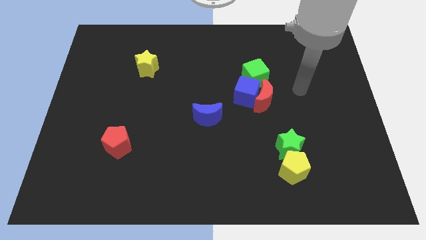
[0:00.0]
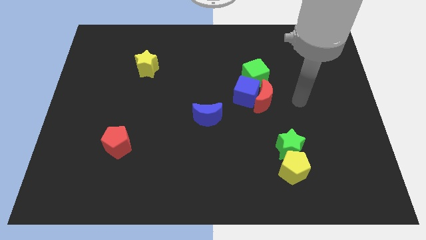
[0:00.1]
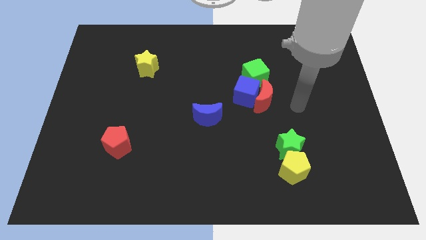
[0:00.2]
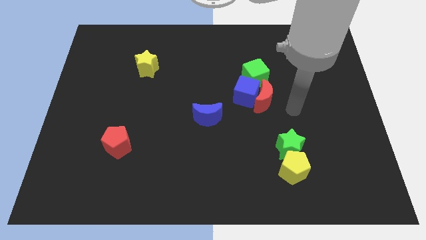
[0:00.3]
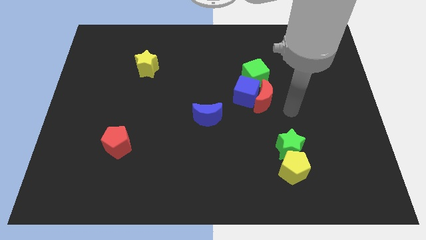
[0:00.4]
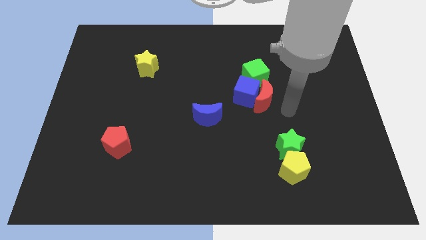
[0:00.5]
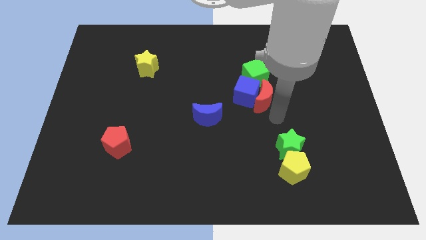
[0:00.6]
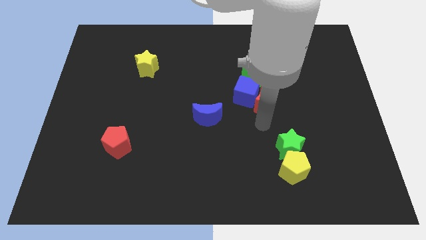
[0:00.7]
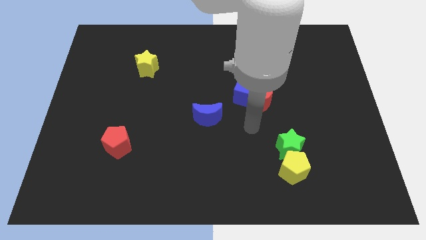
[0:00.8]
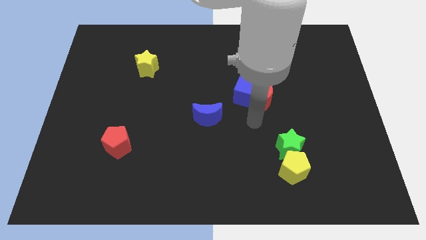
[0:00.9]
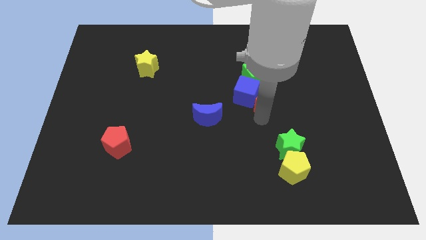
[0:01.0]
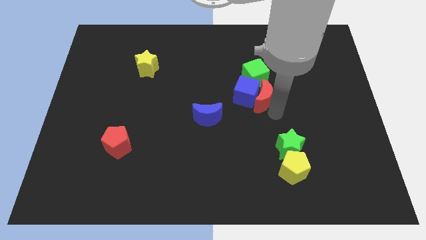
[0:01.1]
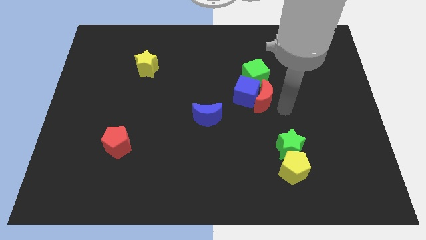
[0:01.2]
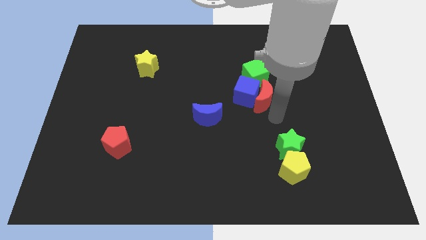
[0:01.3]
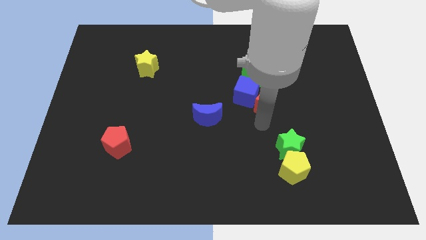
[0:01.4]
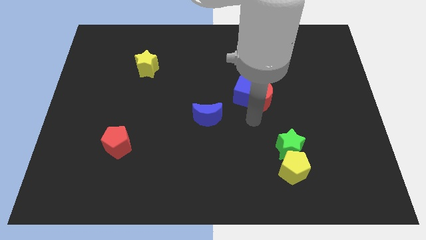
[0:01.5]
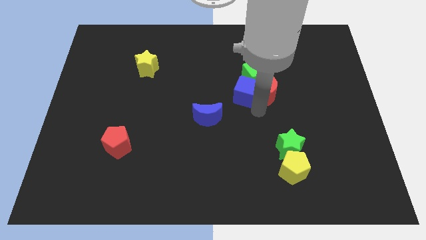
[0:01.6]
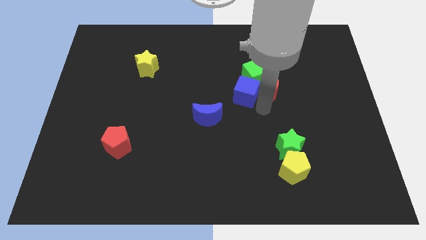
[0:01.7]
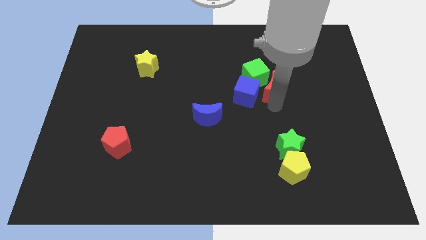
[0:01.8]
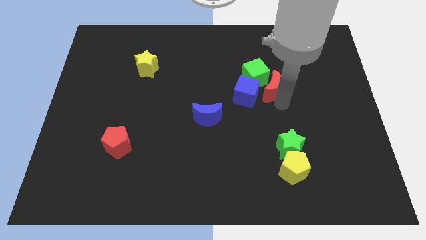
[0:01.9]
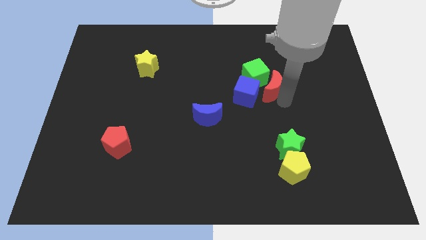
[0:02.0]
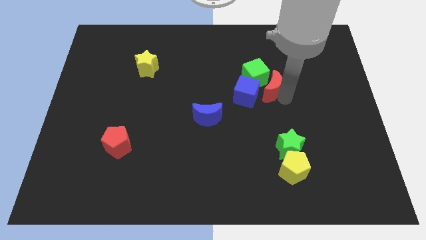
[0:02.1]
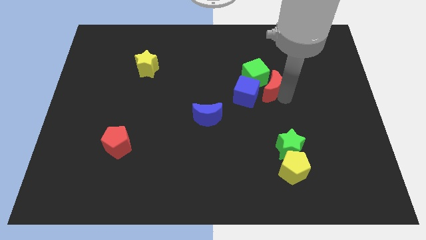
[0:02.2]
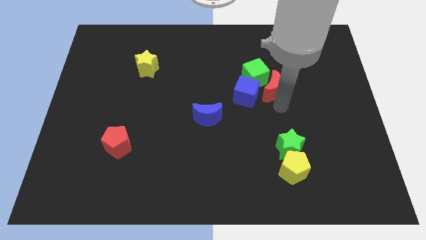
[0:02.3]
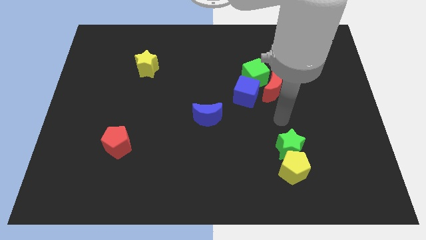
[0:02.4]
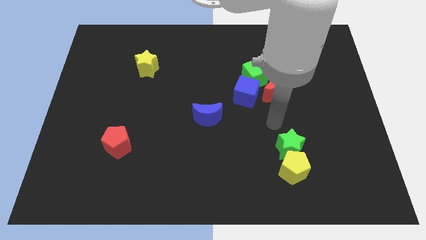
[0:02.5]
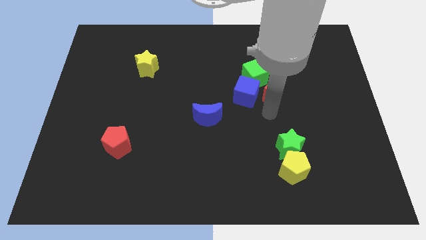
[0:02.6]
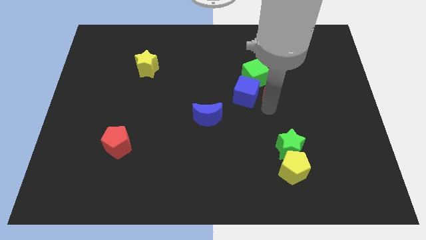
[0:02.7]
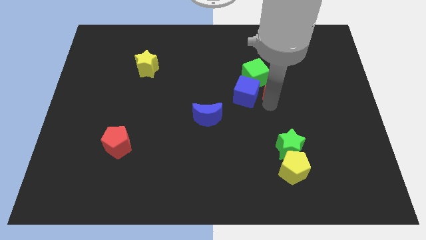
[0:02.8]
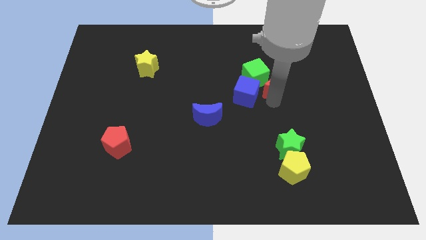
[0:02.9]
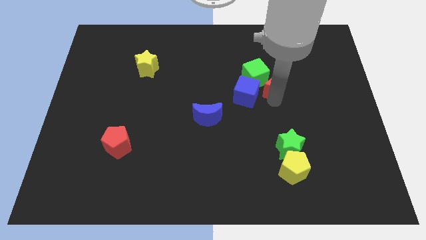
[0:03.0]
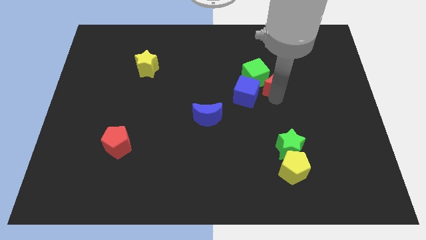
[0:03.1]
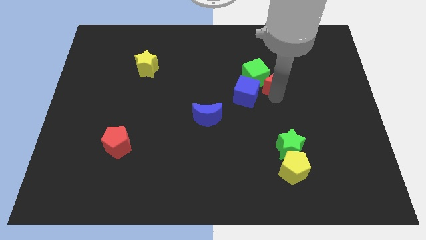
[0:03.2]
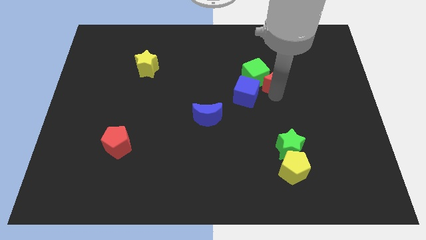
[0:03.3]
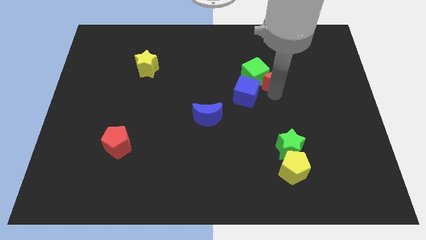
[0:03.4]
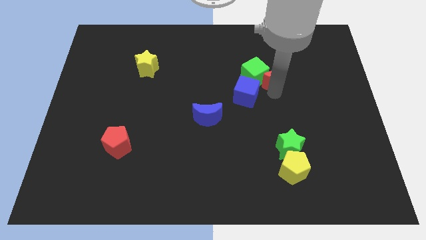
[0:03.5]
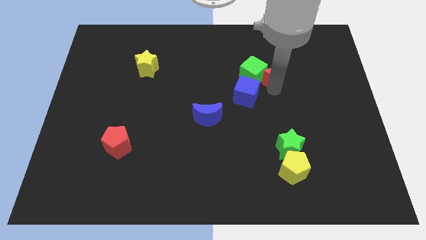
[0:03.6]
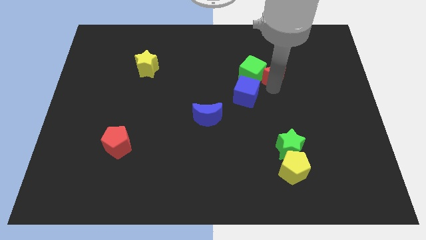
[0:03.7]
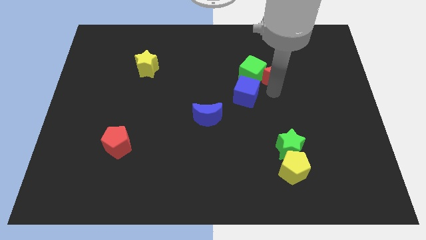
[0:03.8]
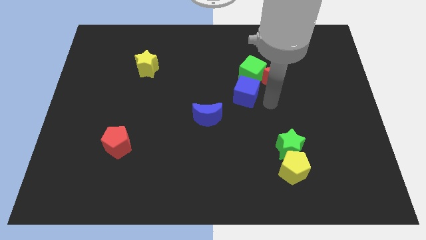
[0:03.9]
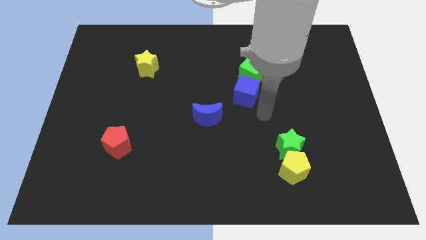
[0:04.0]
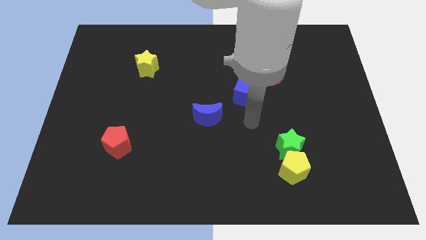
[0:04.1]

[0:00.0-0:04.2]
push the red moon into the green cube

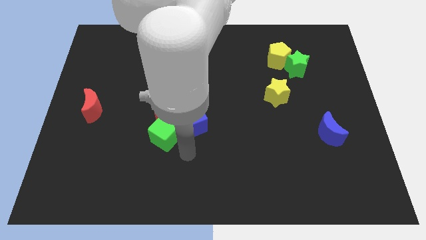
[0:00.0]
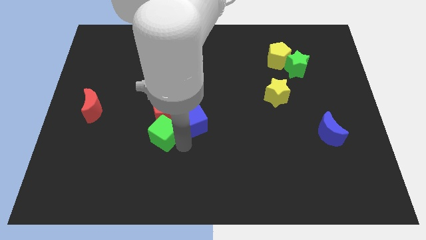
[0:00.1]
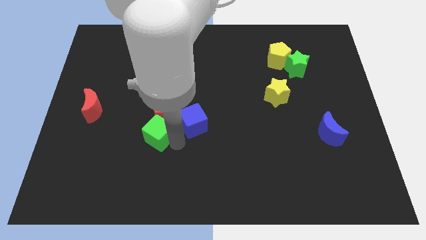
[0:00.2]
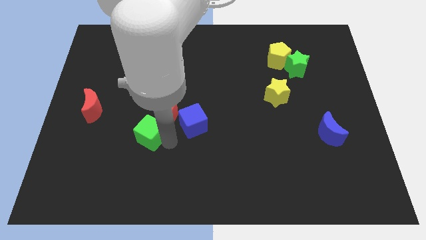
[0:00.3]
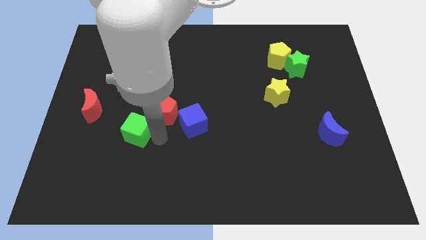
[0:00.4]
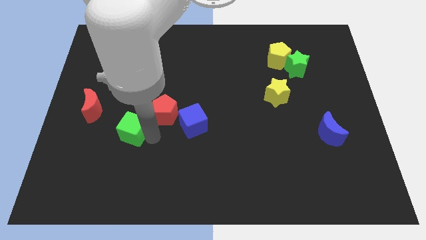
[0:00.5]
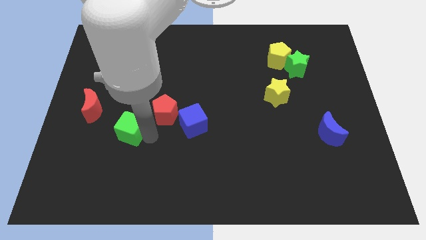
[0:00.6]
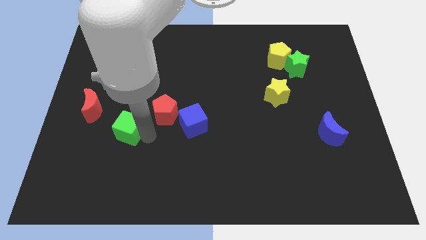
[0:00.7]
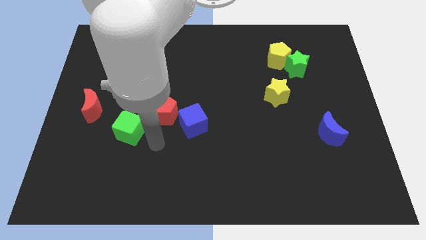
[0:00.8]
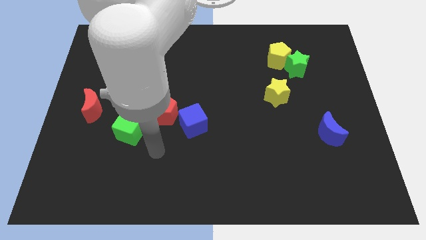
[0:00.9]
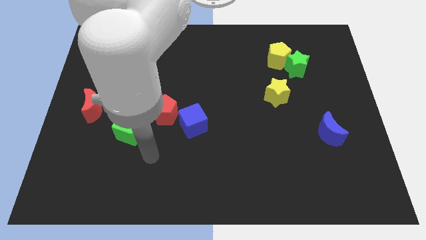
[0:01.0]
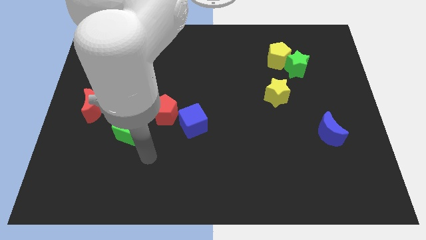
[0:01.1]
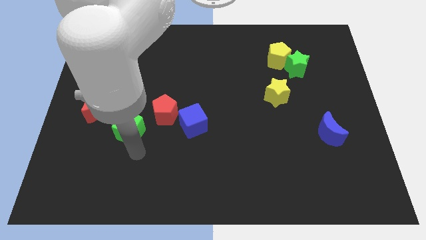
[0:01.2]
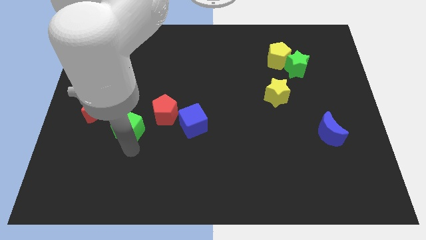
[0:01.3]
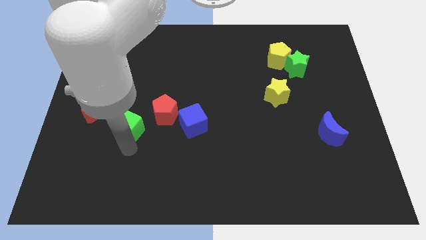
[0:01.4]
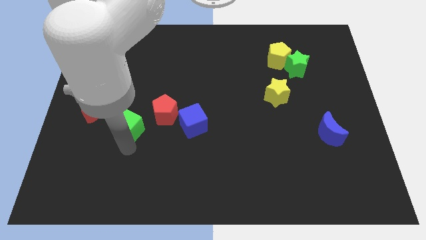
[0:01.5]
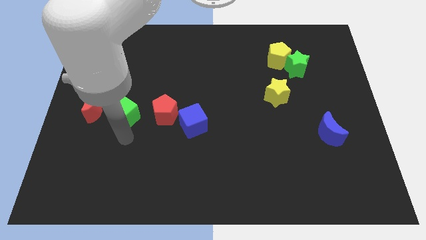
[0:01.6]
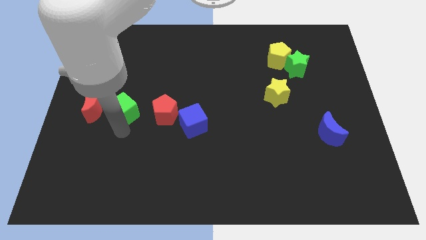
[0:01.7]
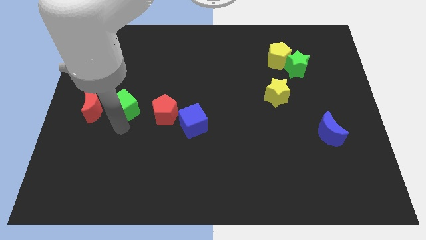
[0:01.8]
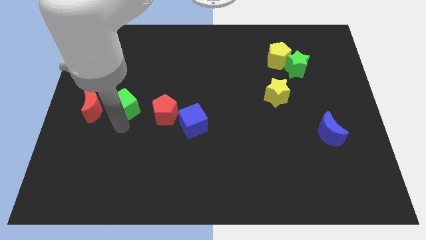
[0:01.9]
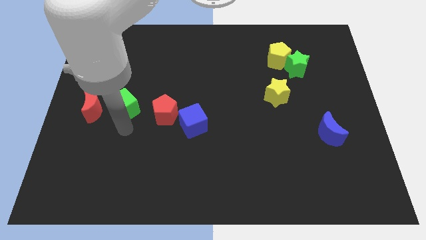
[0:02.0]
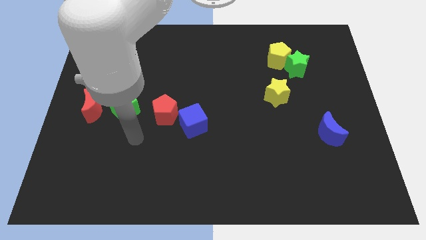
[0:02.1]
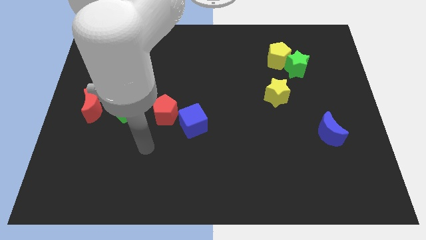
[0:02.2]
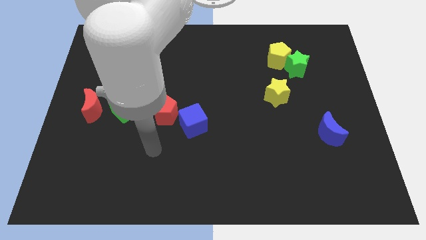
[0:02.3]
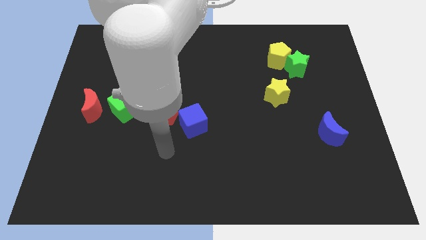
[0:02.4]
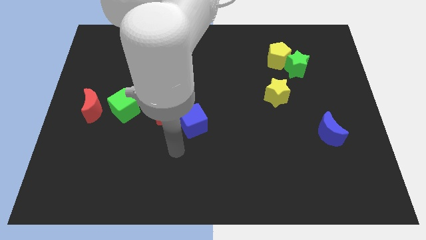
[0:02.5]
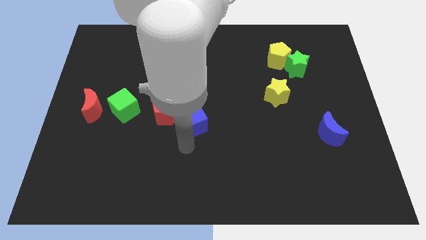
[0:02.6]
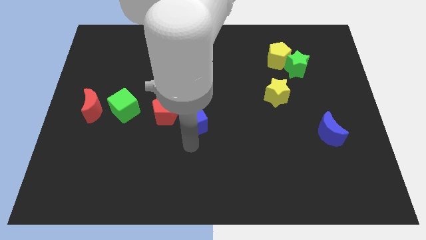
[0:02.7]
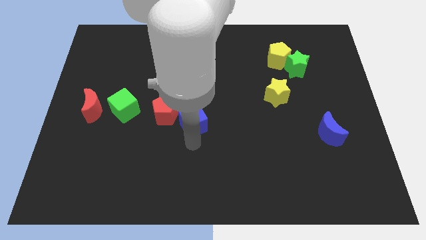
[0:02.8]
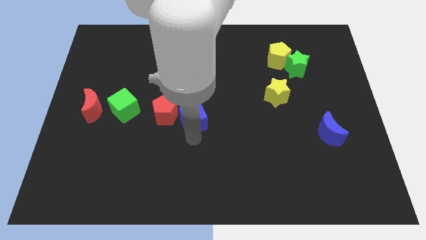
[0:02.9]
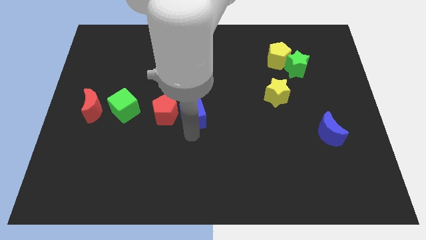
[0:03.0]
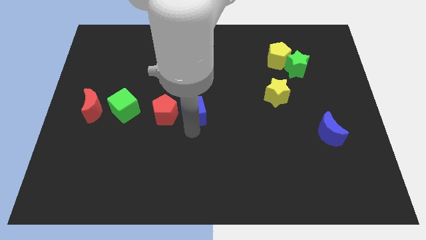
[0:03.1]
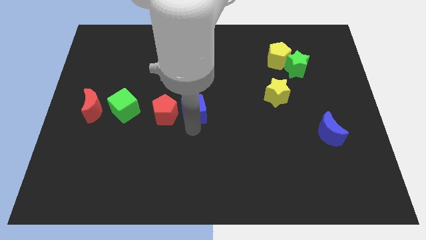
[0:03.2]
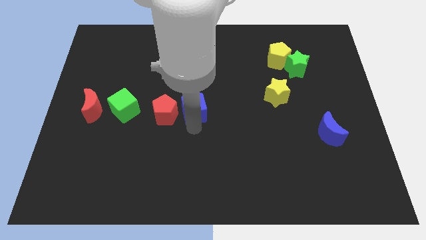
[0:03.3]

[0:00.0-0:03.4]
move the green cube and blue cube towards the center of the board

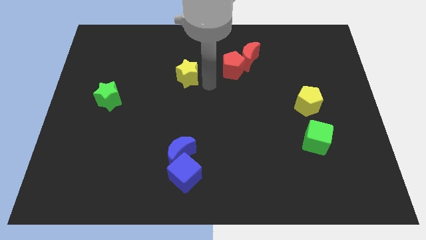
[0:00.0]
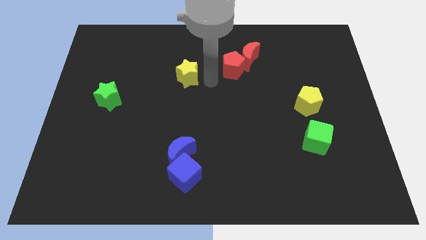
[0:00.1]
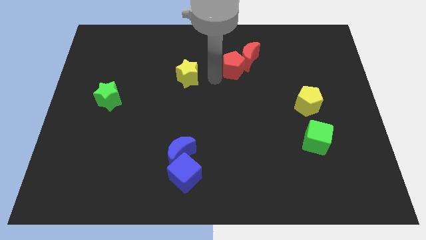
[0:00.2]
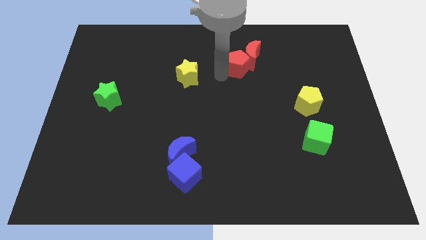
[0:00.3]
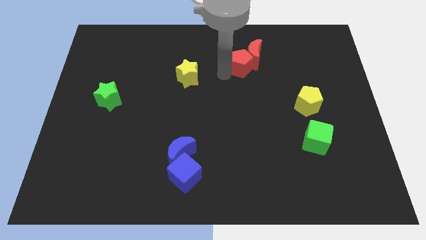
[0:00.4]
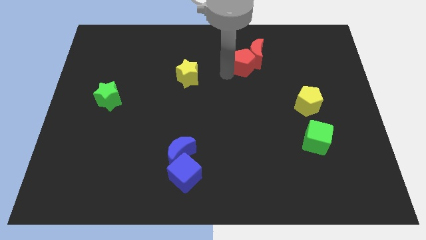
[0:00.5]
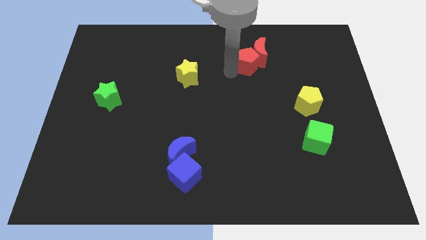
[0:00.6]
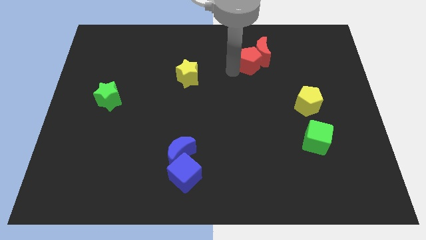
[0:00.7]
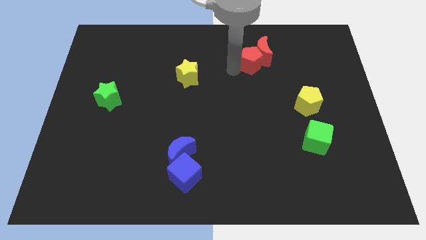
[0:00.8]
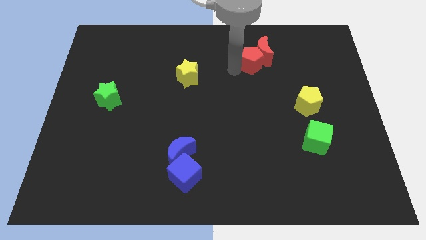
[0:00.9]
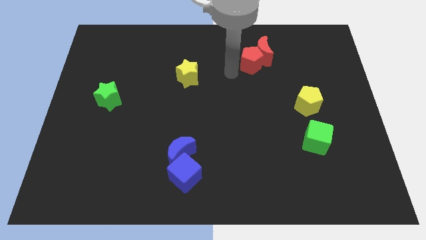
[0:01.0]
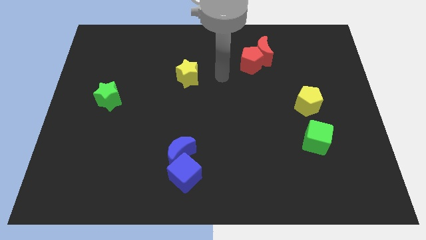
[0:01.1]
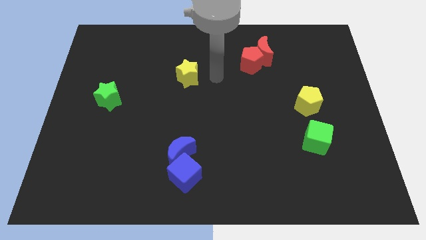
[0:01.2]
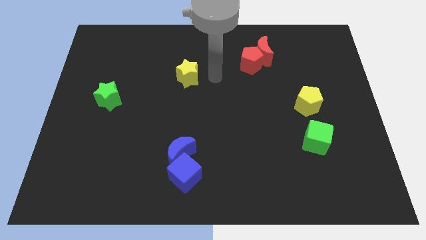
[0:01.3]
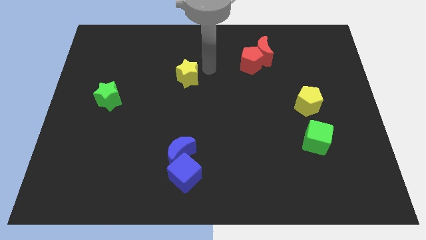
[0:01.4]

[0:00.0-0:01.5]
move your arm towards the yellow star
